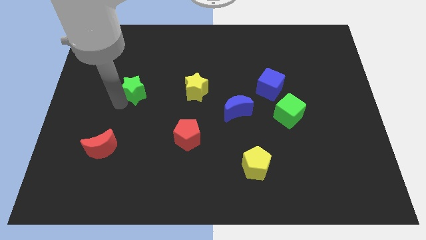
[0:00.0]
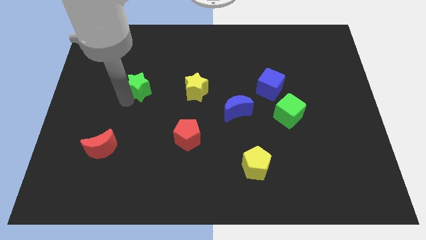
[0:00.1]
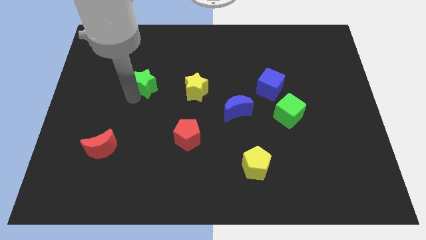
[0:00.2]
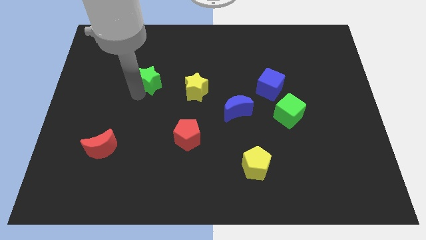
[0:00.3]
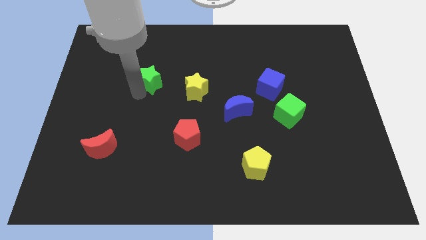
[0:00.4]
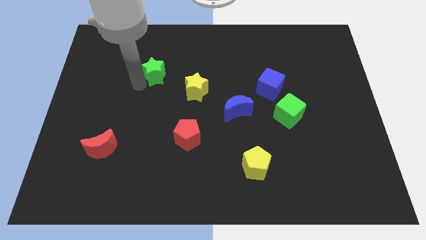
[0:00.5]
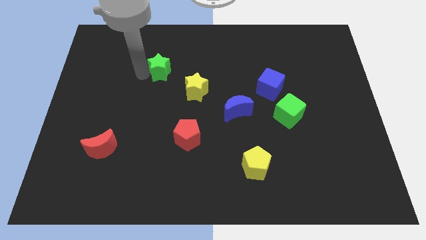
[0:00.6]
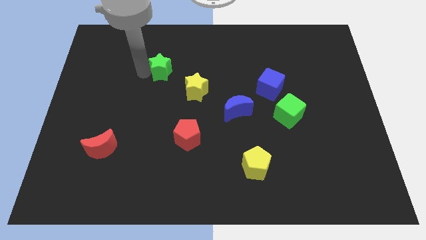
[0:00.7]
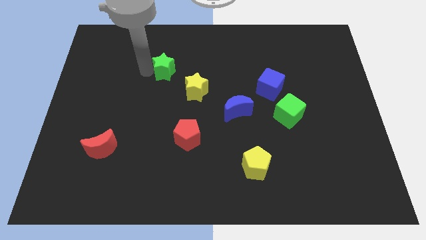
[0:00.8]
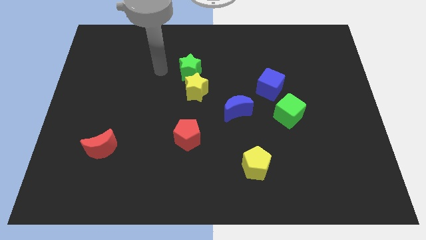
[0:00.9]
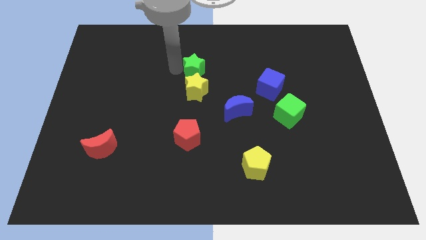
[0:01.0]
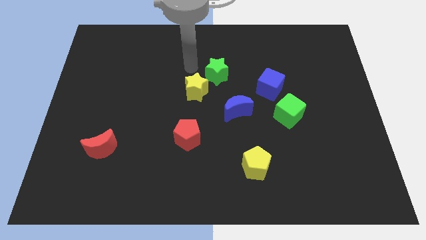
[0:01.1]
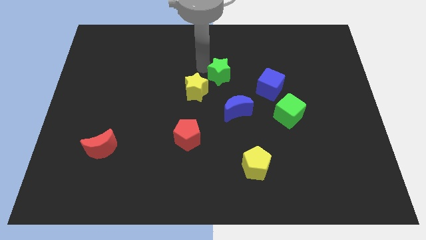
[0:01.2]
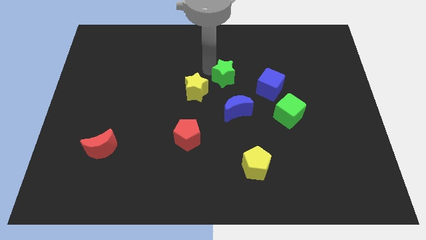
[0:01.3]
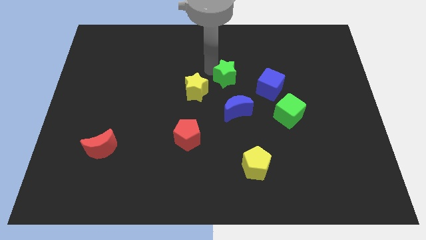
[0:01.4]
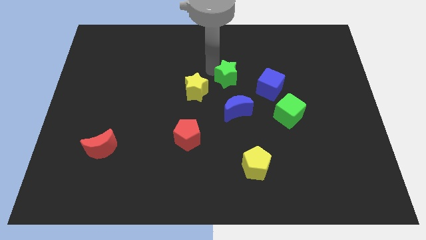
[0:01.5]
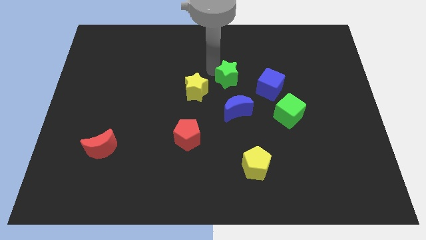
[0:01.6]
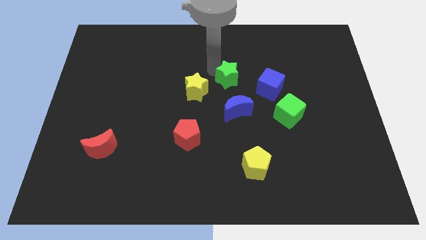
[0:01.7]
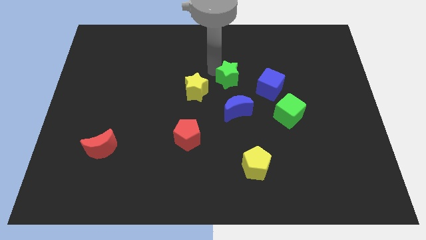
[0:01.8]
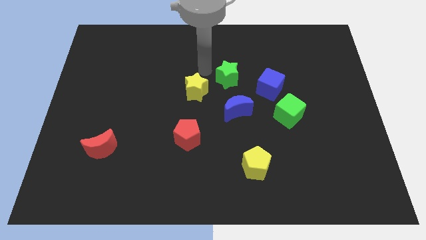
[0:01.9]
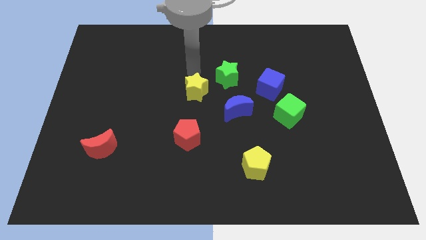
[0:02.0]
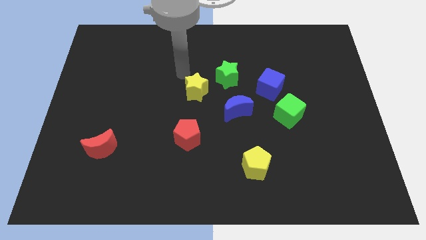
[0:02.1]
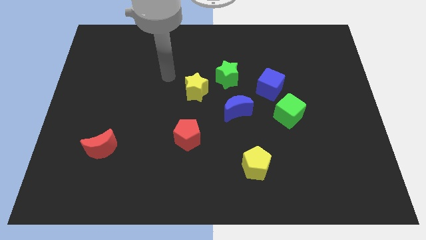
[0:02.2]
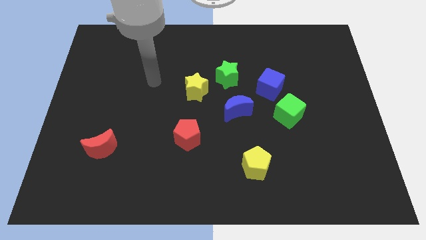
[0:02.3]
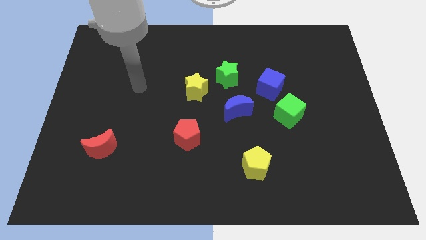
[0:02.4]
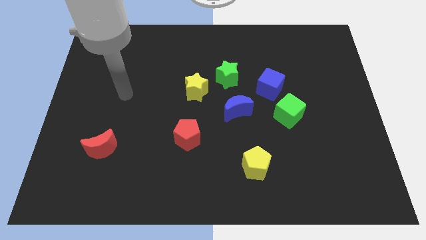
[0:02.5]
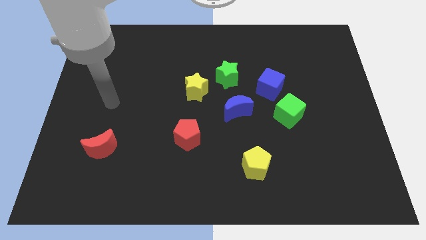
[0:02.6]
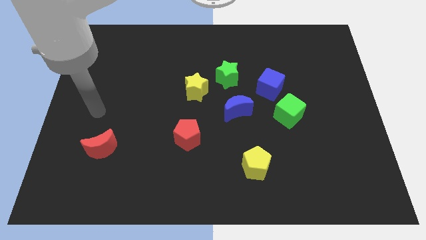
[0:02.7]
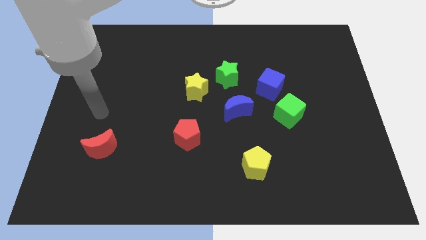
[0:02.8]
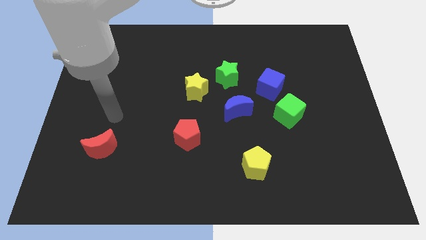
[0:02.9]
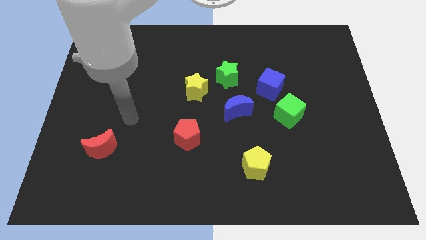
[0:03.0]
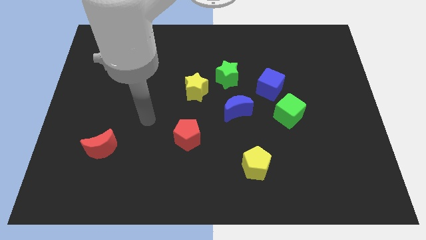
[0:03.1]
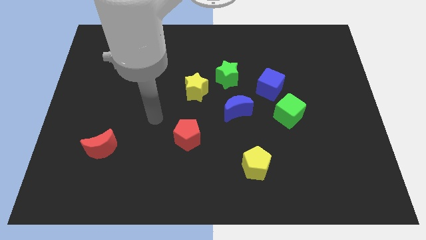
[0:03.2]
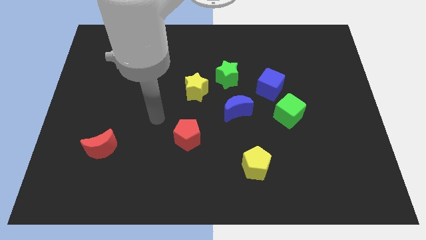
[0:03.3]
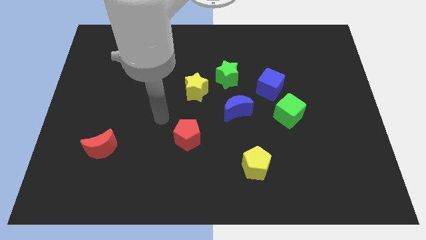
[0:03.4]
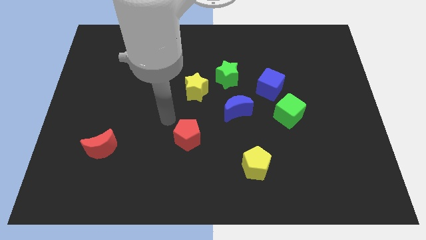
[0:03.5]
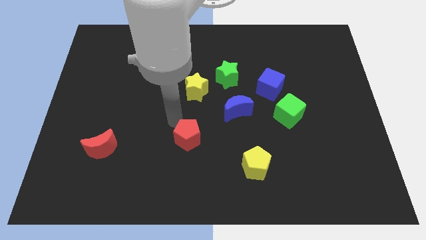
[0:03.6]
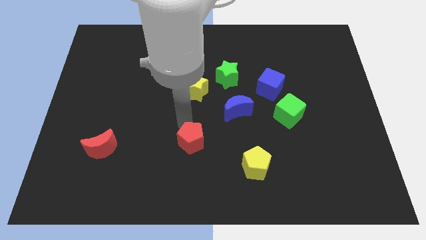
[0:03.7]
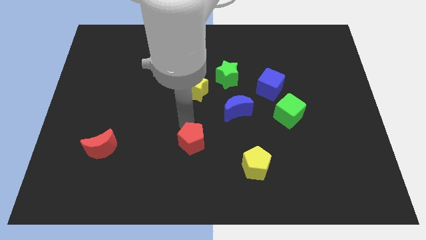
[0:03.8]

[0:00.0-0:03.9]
place the arm above the red pentagon

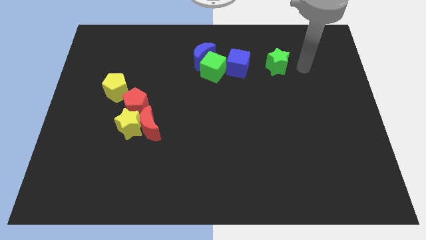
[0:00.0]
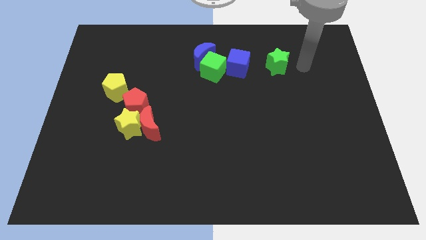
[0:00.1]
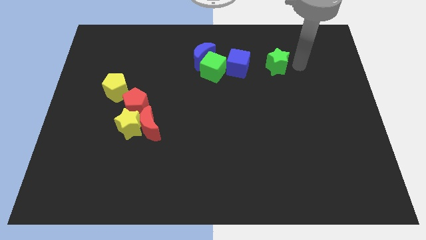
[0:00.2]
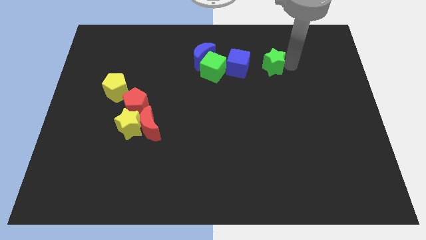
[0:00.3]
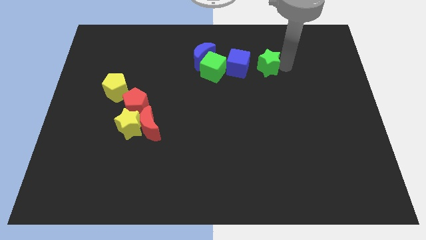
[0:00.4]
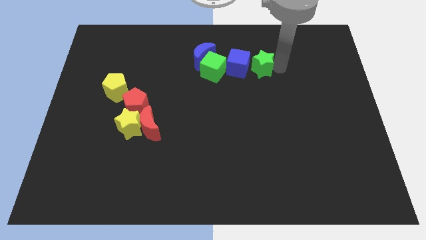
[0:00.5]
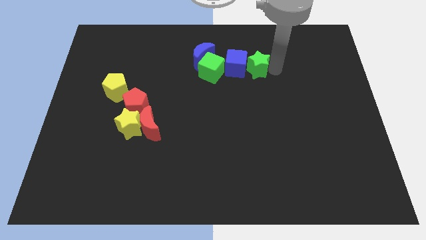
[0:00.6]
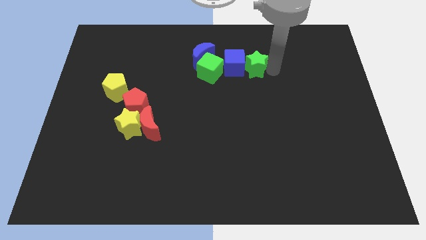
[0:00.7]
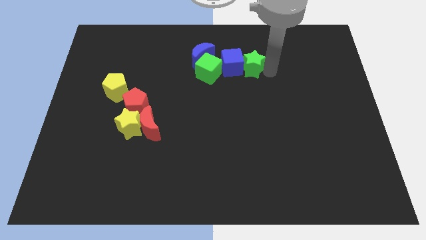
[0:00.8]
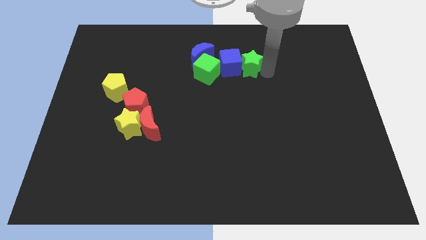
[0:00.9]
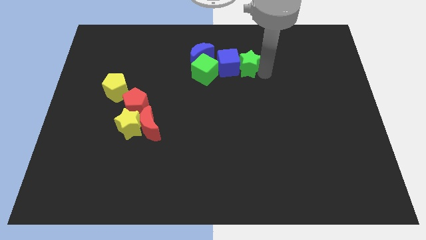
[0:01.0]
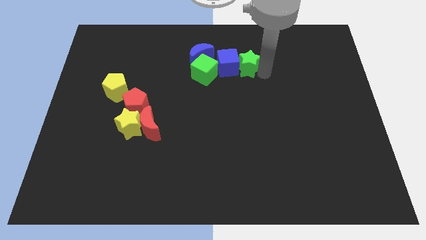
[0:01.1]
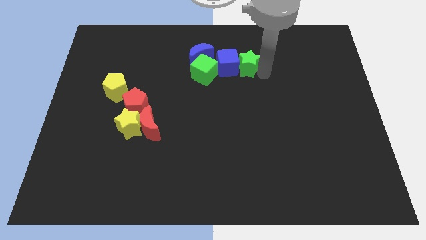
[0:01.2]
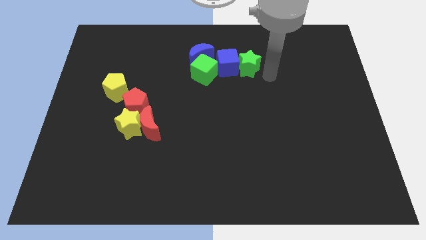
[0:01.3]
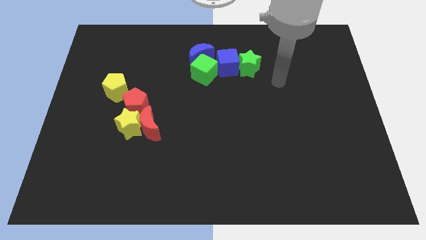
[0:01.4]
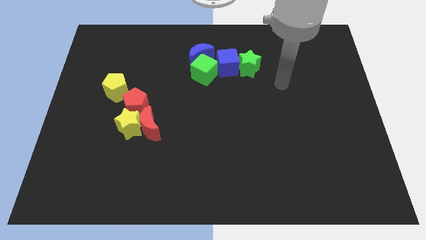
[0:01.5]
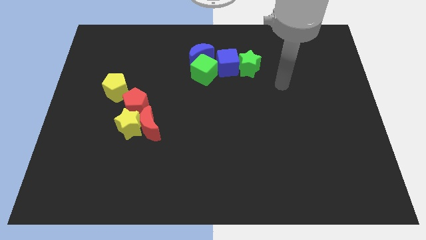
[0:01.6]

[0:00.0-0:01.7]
push the green star into the blue cube

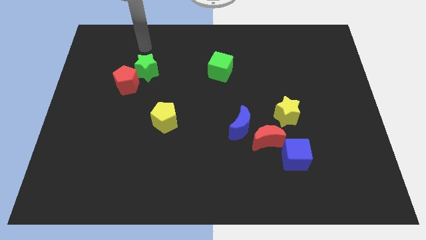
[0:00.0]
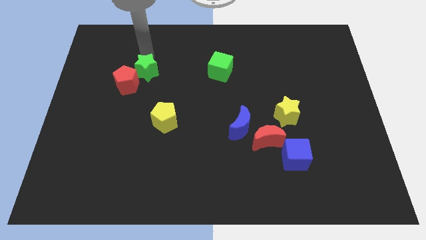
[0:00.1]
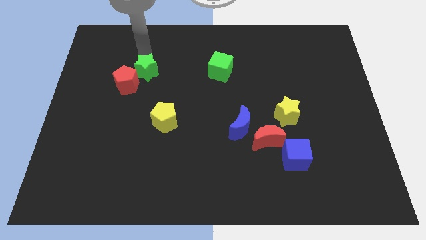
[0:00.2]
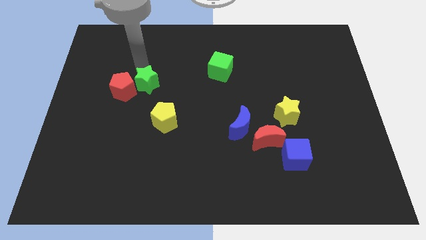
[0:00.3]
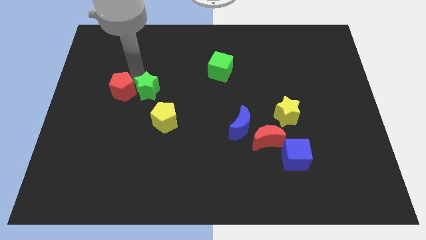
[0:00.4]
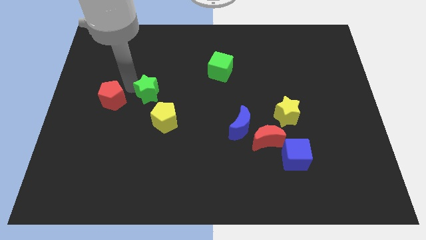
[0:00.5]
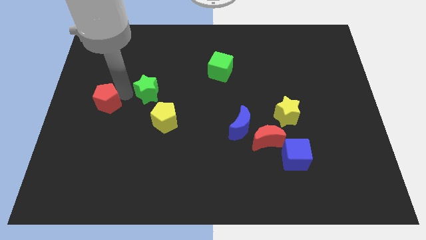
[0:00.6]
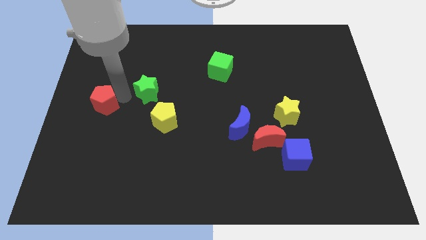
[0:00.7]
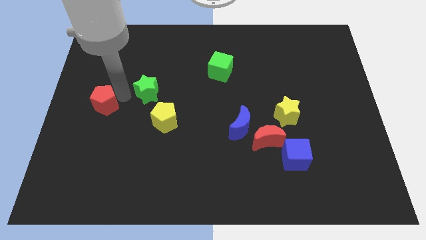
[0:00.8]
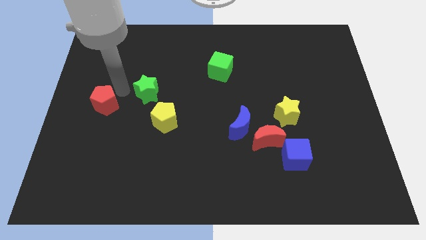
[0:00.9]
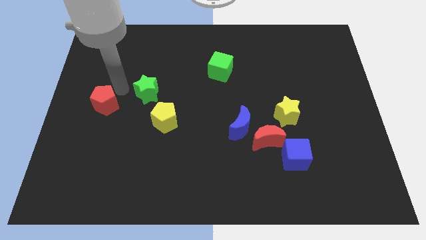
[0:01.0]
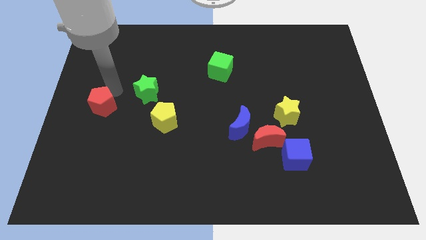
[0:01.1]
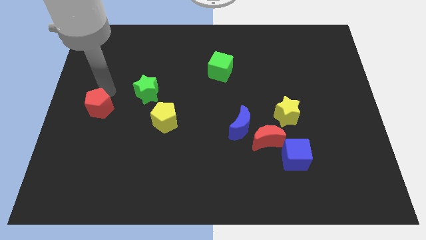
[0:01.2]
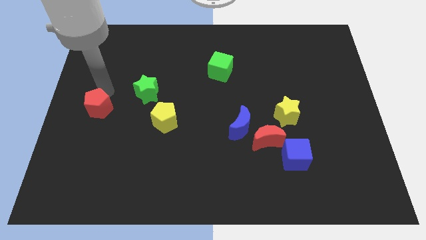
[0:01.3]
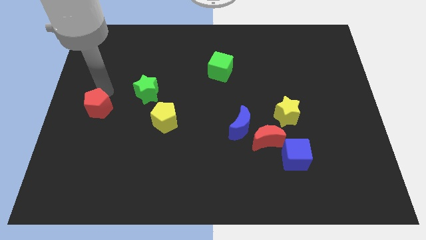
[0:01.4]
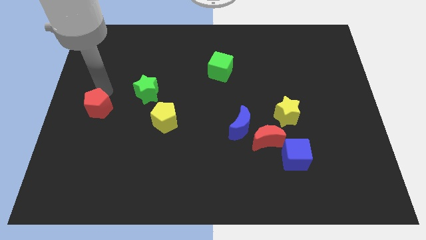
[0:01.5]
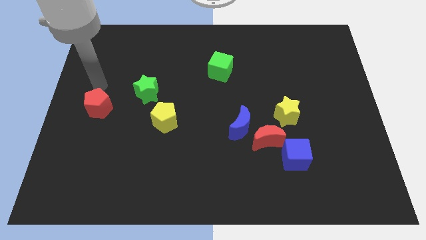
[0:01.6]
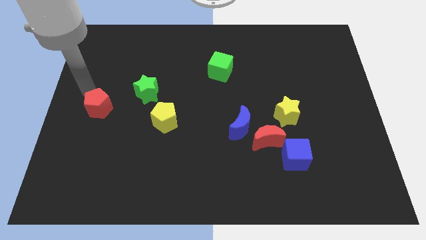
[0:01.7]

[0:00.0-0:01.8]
separate the red pentagon from the green star

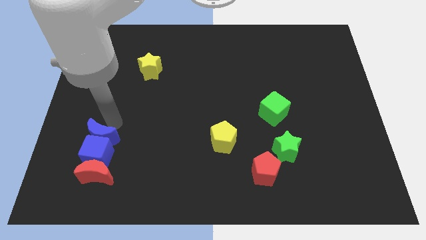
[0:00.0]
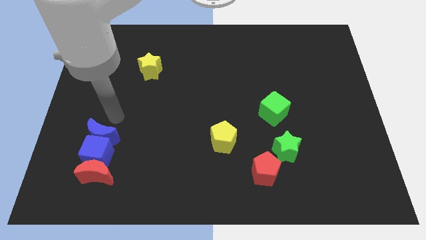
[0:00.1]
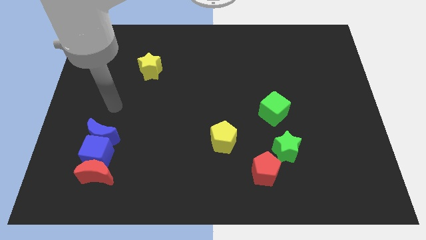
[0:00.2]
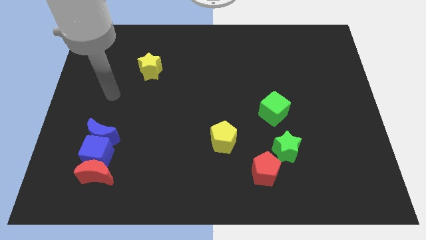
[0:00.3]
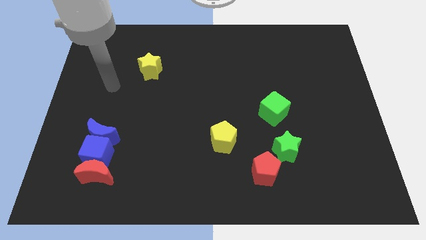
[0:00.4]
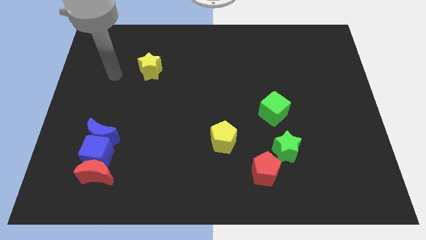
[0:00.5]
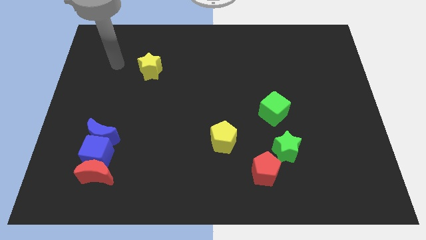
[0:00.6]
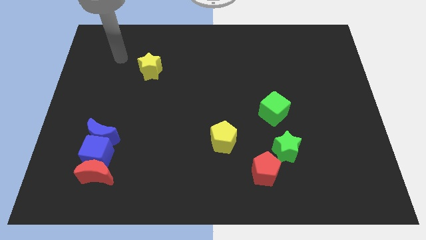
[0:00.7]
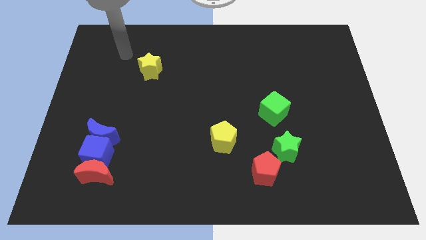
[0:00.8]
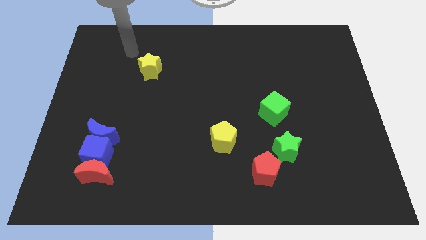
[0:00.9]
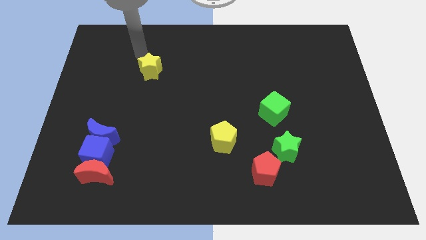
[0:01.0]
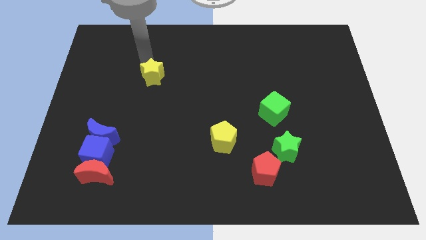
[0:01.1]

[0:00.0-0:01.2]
move your arm towards the yellow star

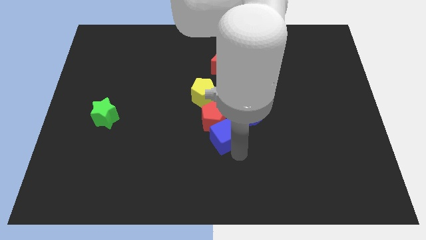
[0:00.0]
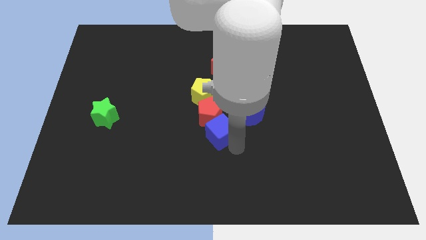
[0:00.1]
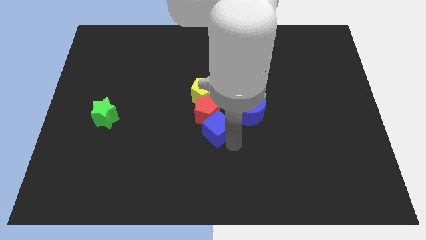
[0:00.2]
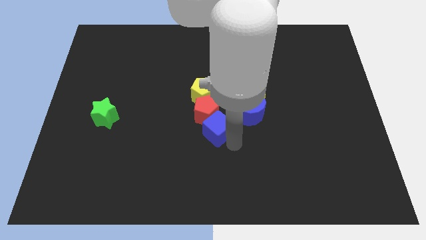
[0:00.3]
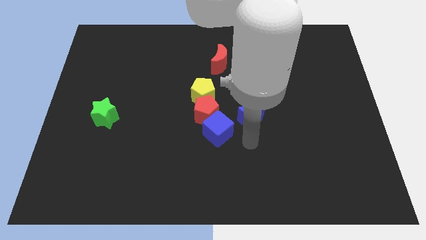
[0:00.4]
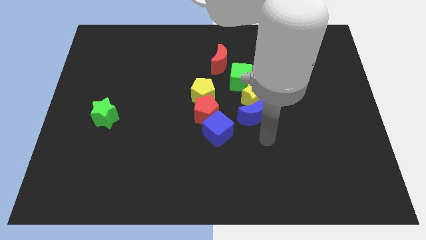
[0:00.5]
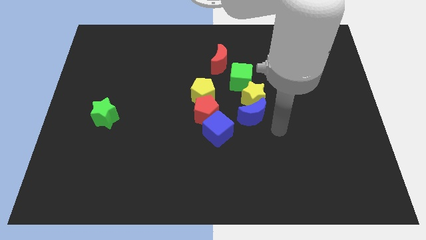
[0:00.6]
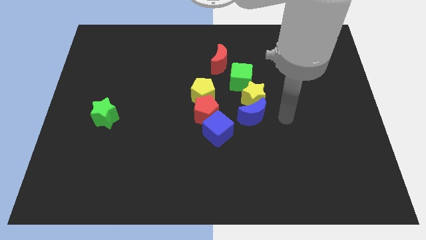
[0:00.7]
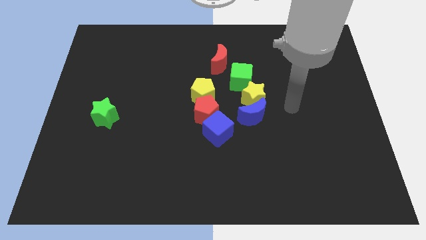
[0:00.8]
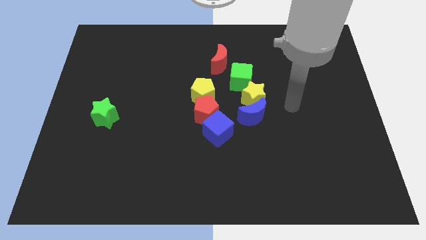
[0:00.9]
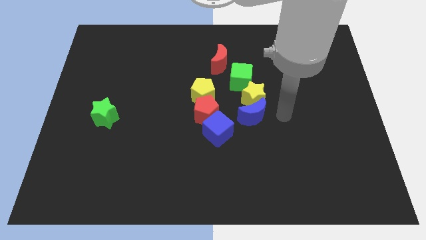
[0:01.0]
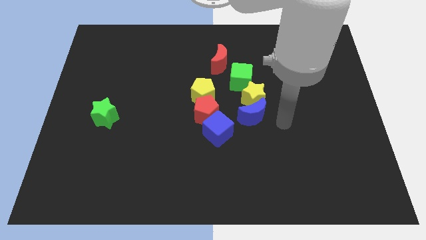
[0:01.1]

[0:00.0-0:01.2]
move the blue cube into red pentagon
